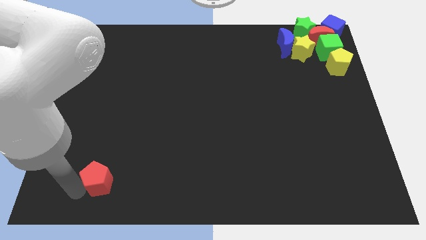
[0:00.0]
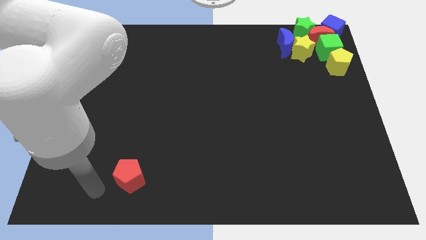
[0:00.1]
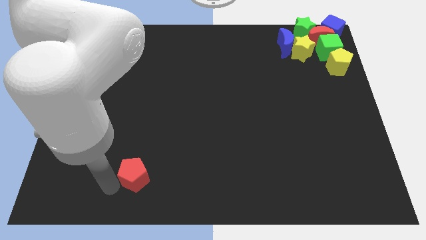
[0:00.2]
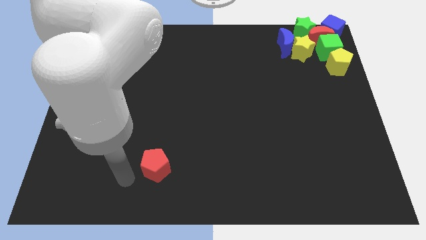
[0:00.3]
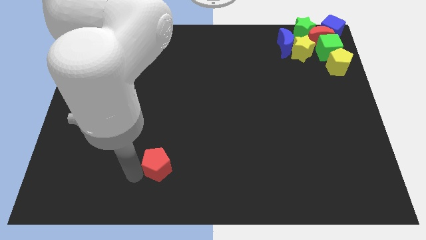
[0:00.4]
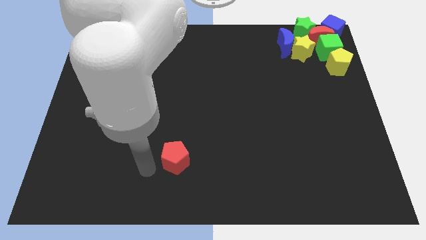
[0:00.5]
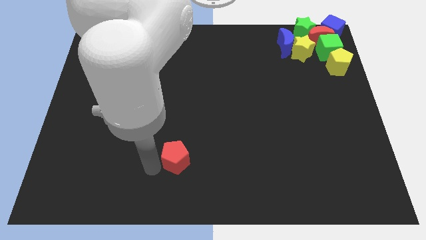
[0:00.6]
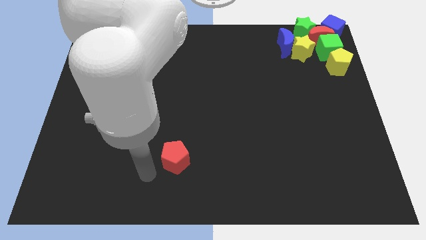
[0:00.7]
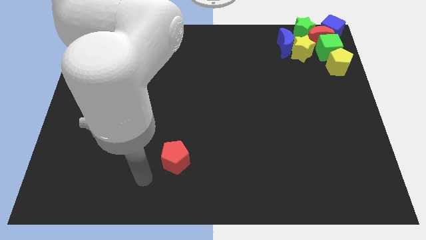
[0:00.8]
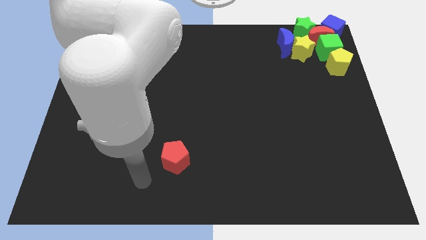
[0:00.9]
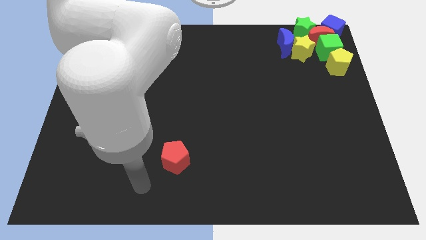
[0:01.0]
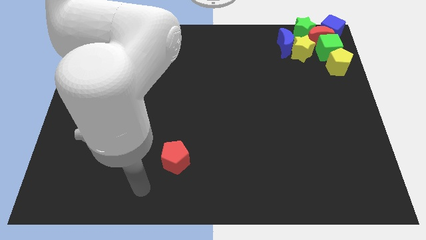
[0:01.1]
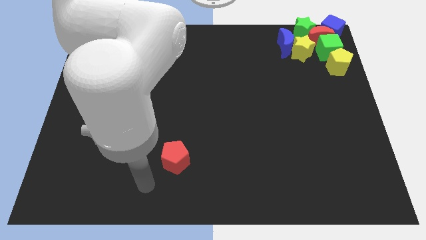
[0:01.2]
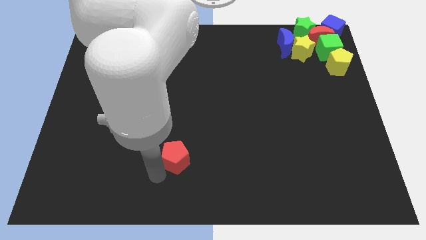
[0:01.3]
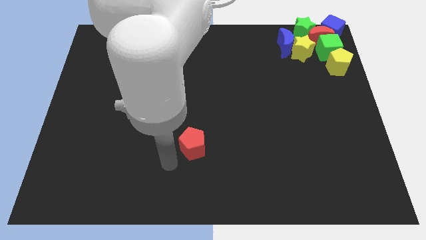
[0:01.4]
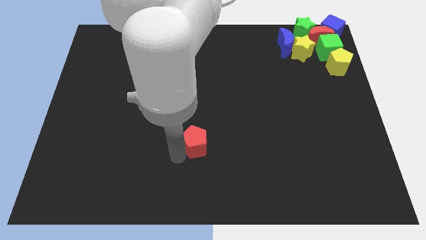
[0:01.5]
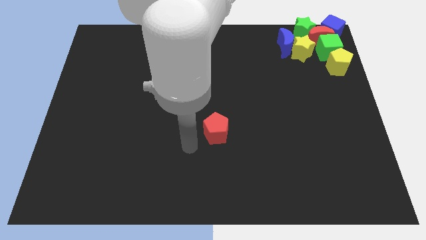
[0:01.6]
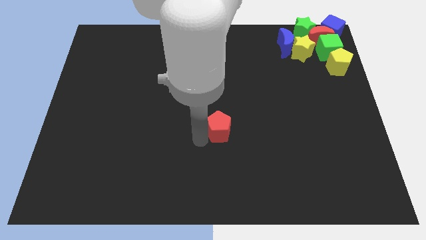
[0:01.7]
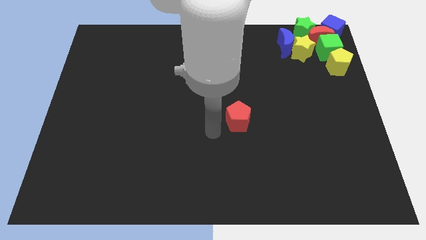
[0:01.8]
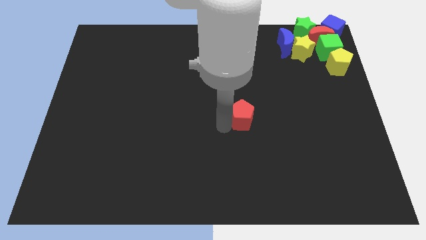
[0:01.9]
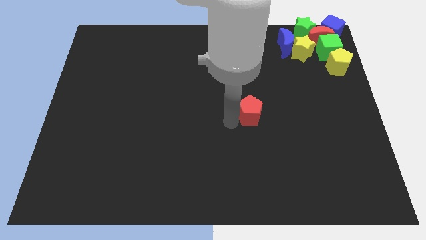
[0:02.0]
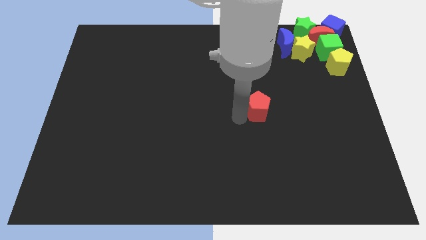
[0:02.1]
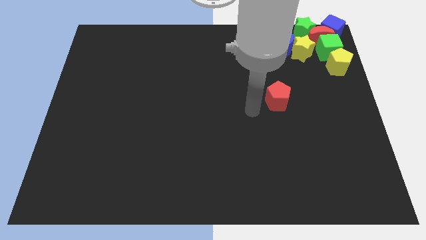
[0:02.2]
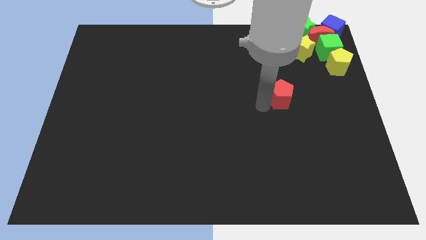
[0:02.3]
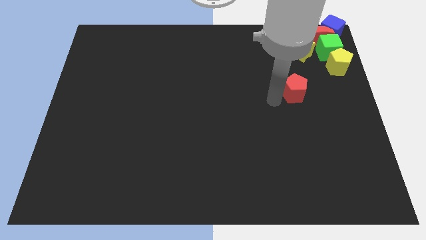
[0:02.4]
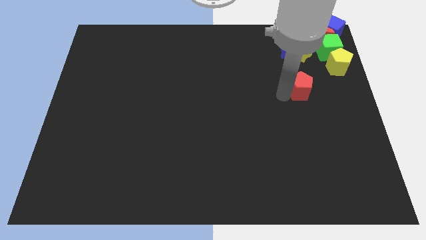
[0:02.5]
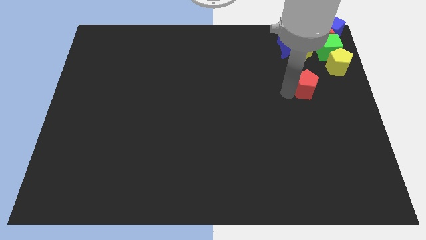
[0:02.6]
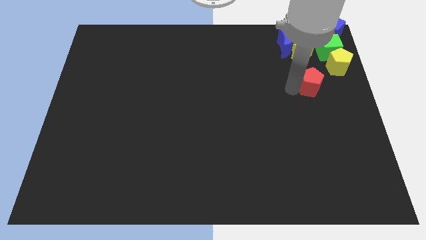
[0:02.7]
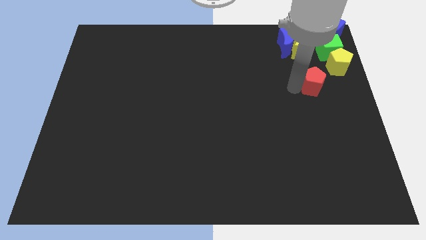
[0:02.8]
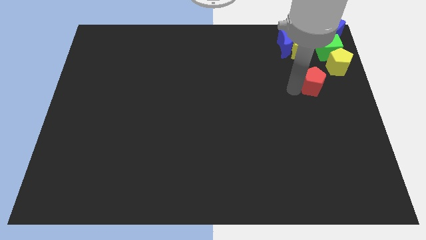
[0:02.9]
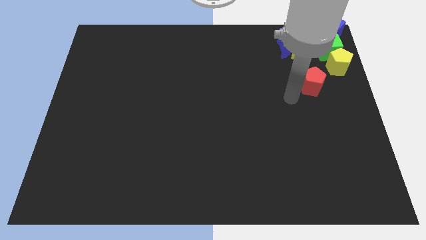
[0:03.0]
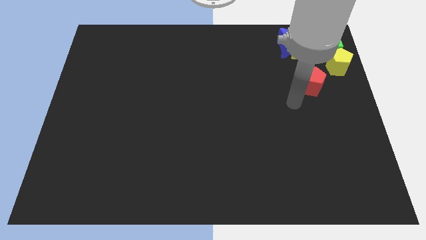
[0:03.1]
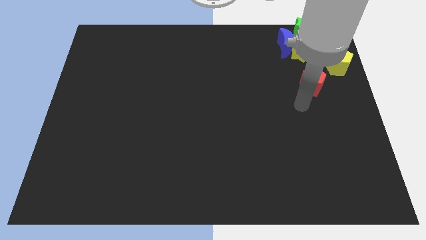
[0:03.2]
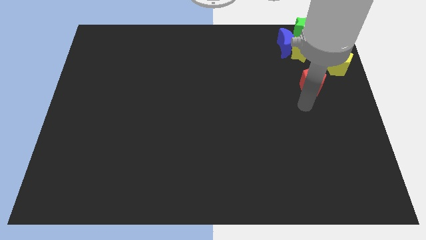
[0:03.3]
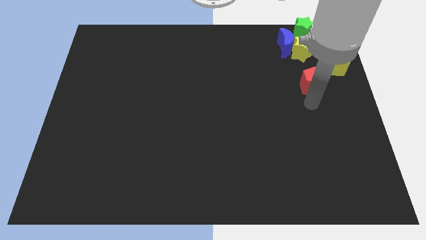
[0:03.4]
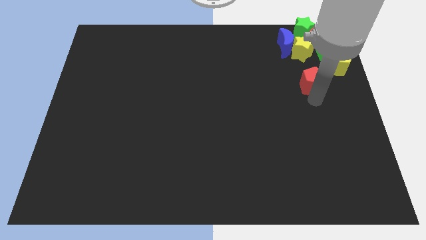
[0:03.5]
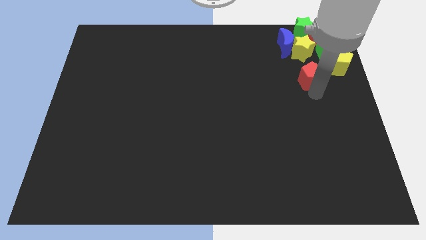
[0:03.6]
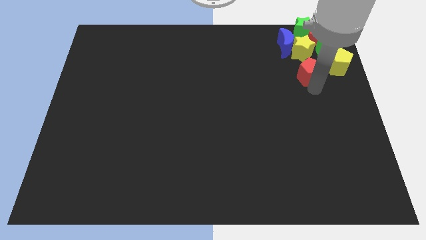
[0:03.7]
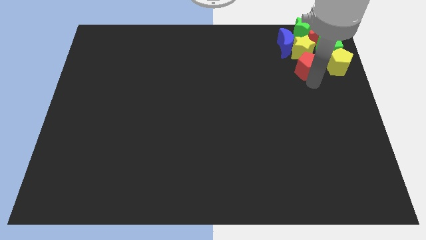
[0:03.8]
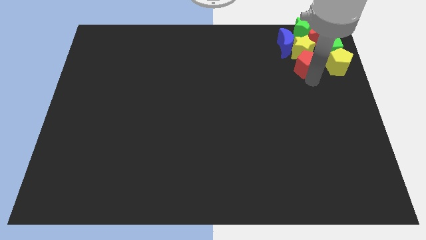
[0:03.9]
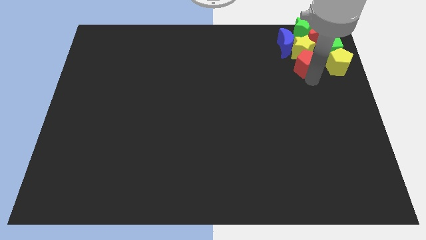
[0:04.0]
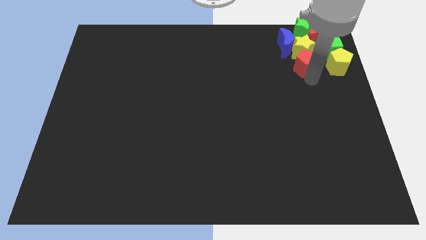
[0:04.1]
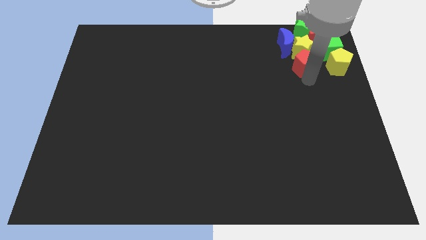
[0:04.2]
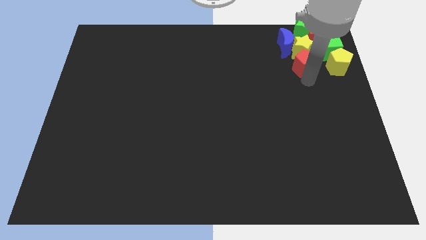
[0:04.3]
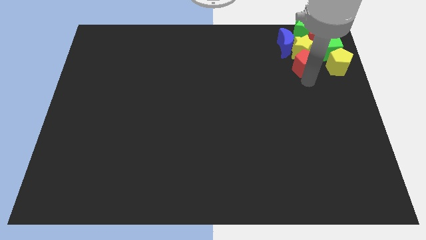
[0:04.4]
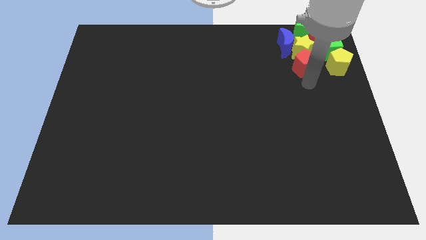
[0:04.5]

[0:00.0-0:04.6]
drag the red pentagon to the group of blocks

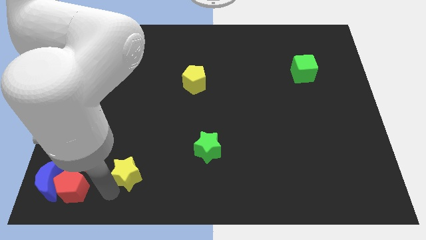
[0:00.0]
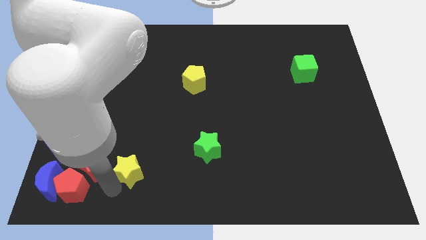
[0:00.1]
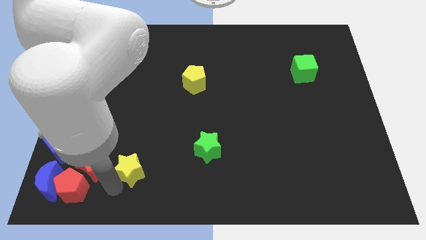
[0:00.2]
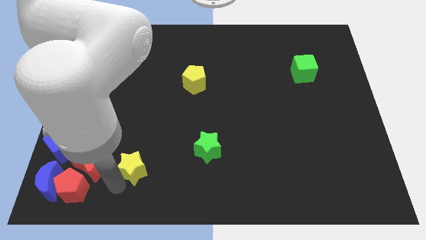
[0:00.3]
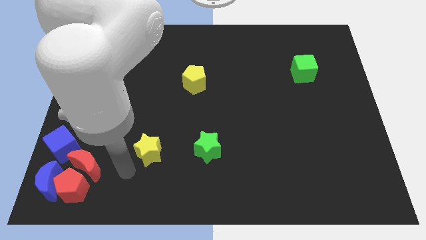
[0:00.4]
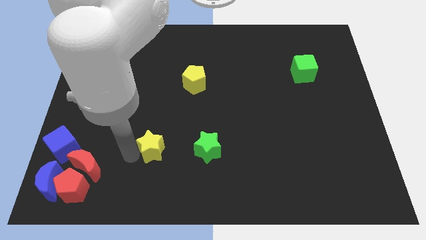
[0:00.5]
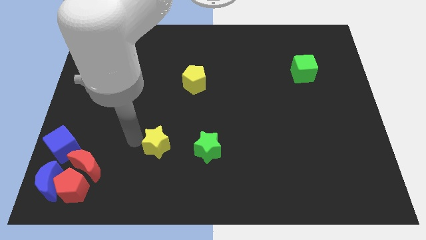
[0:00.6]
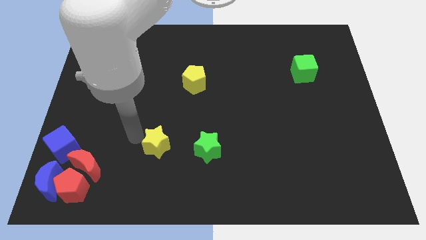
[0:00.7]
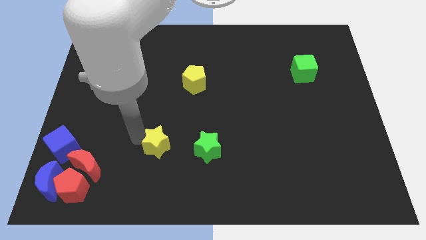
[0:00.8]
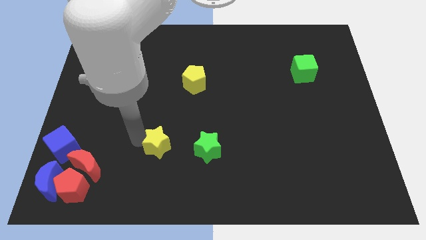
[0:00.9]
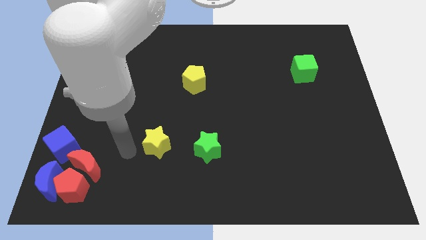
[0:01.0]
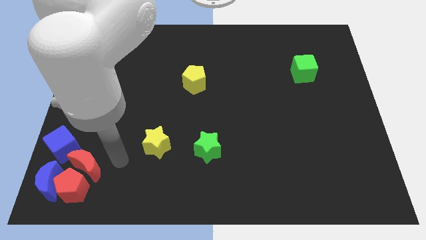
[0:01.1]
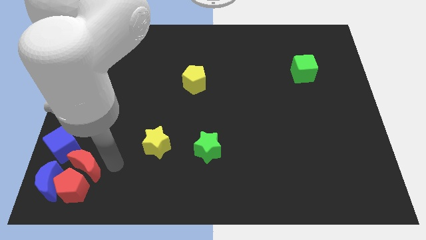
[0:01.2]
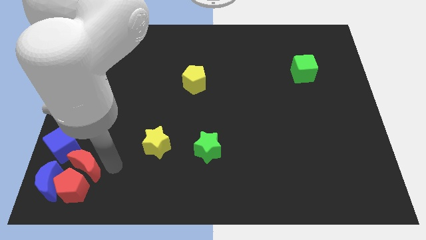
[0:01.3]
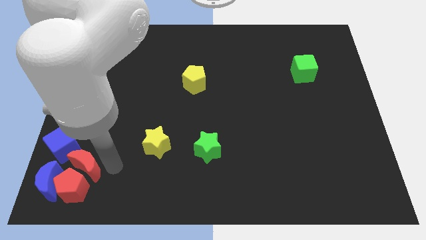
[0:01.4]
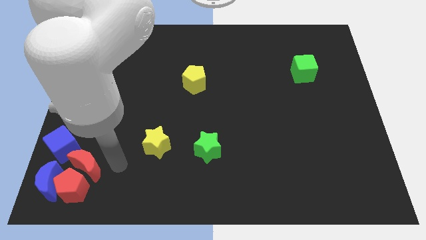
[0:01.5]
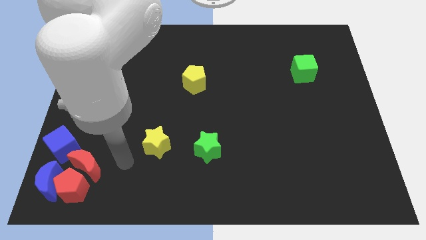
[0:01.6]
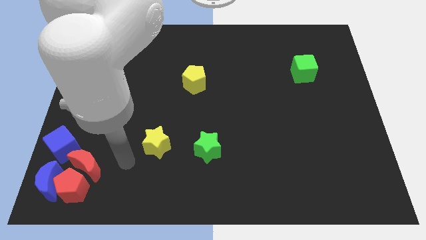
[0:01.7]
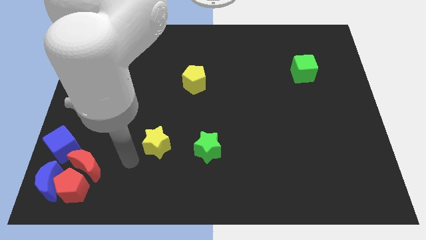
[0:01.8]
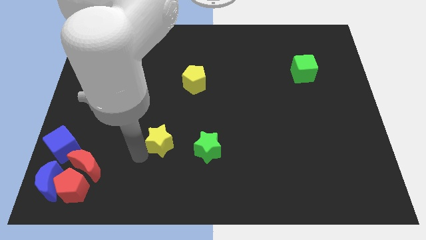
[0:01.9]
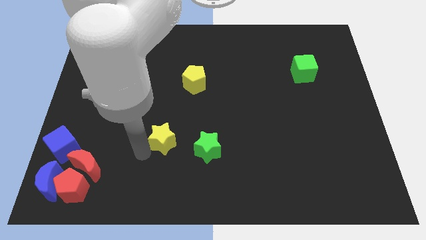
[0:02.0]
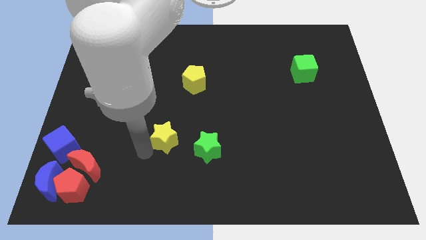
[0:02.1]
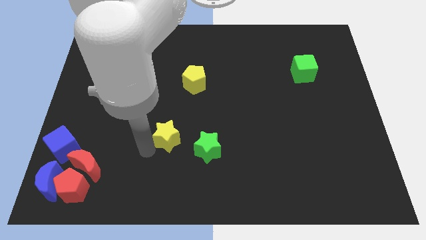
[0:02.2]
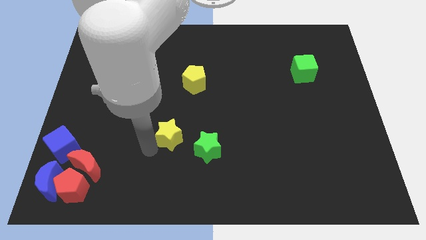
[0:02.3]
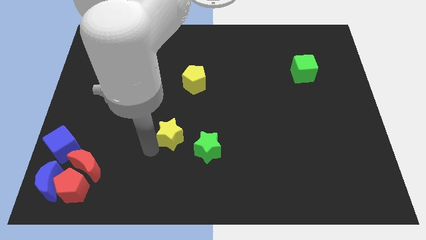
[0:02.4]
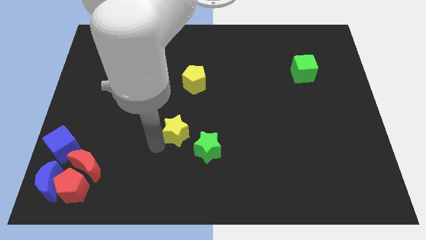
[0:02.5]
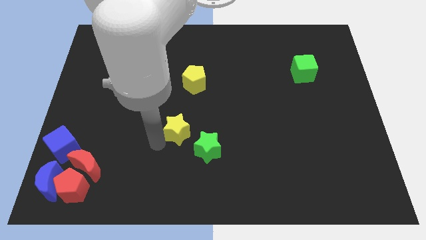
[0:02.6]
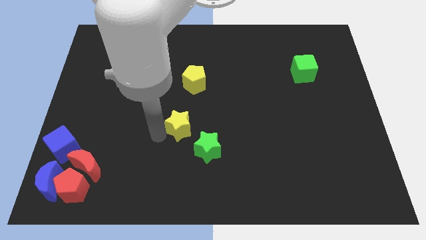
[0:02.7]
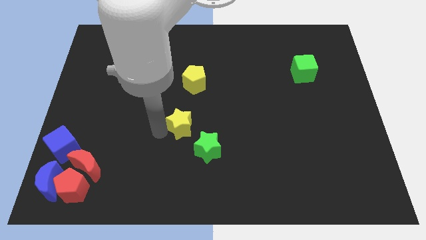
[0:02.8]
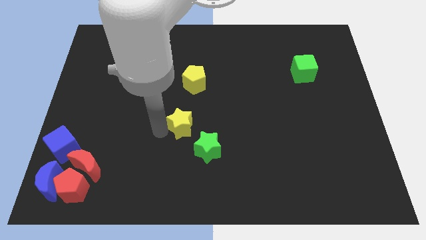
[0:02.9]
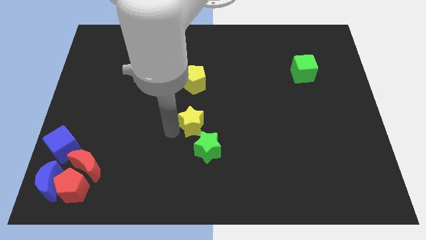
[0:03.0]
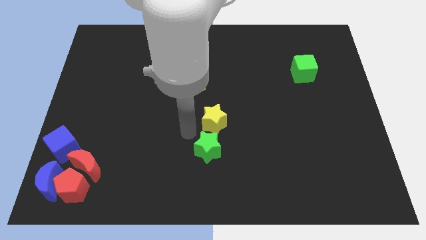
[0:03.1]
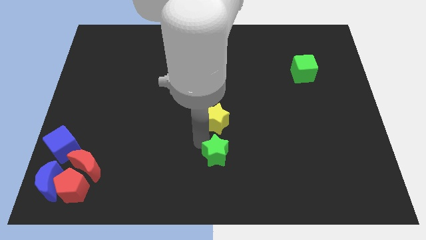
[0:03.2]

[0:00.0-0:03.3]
place yellow star above green star

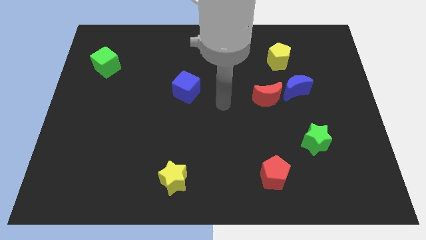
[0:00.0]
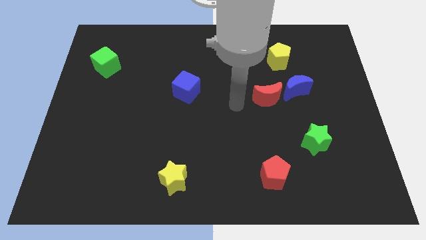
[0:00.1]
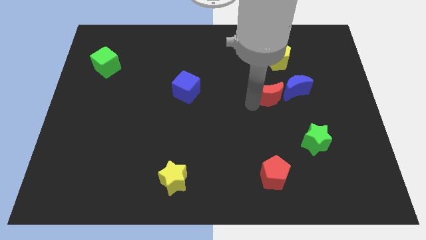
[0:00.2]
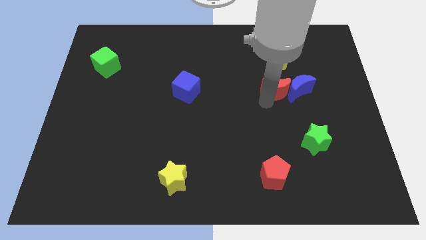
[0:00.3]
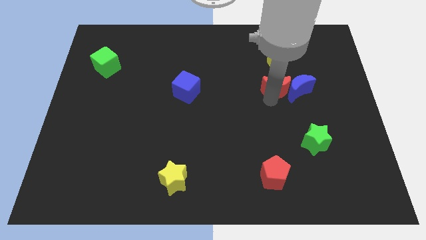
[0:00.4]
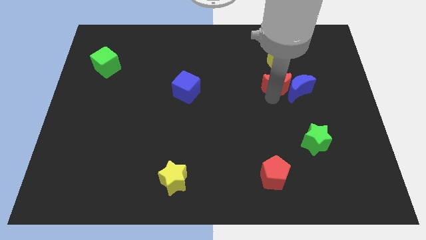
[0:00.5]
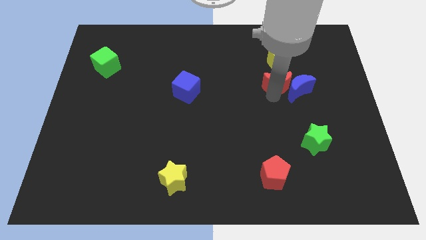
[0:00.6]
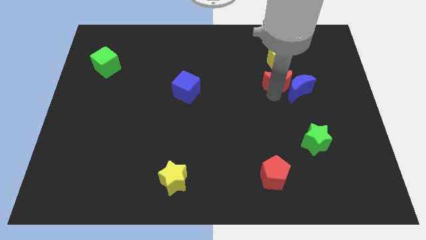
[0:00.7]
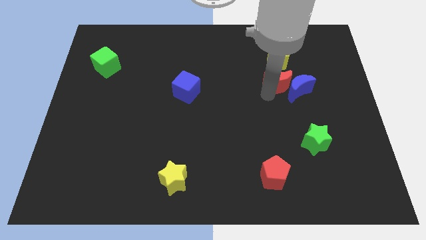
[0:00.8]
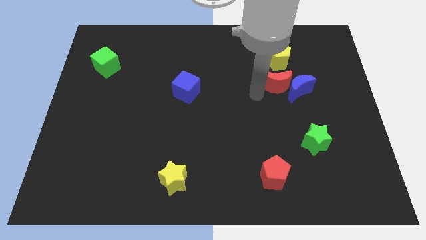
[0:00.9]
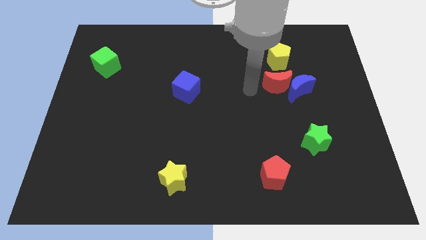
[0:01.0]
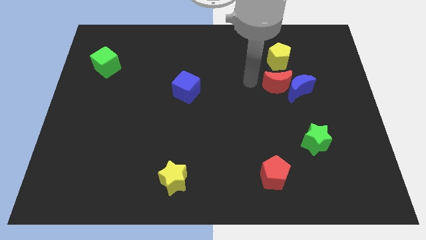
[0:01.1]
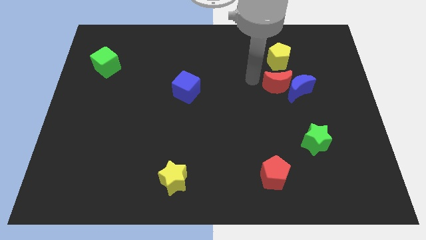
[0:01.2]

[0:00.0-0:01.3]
push the red moon upwards slightly to the bottom of the yellow pentagon
